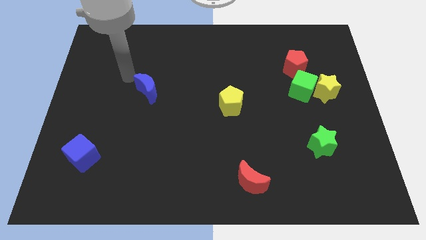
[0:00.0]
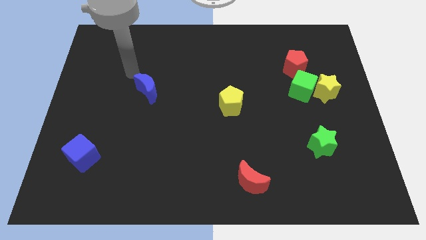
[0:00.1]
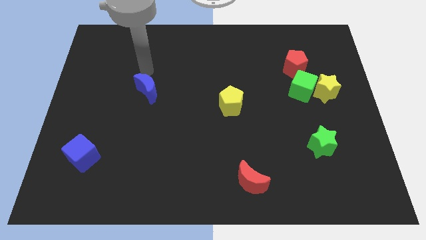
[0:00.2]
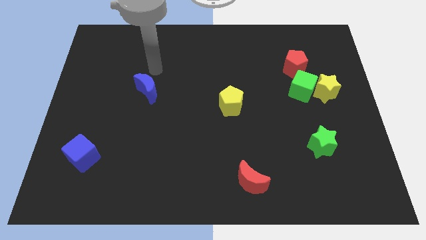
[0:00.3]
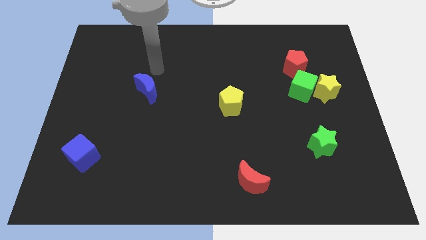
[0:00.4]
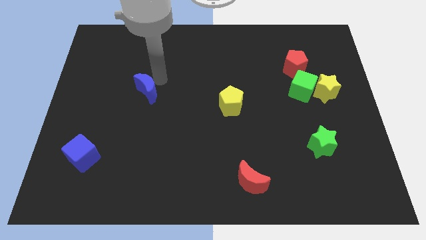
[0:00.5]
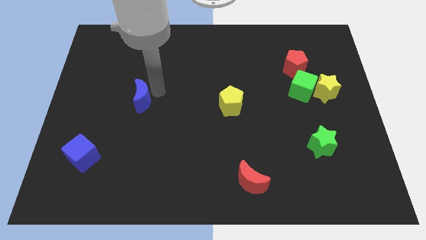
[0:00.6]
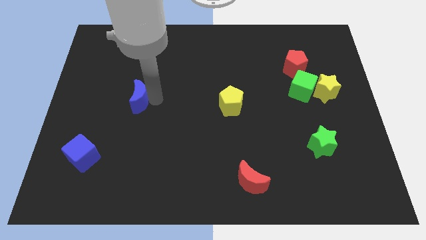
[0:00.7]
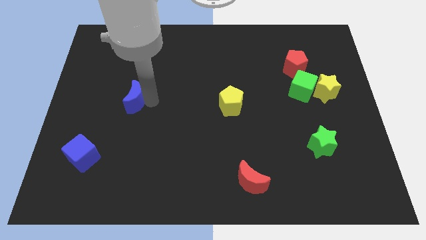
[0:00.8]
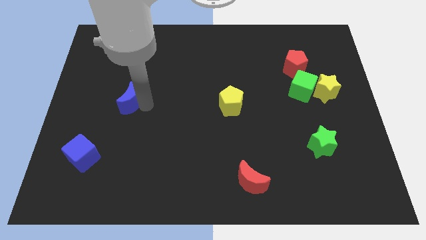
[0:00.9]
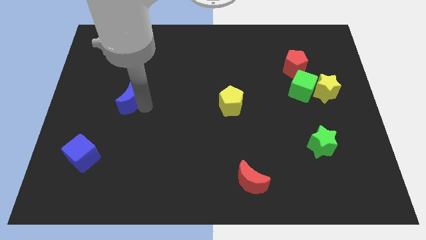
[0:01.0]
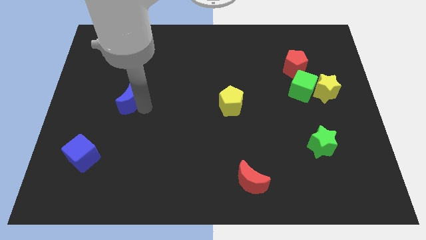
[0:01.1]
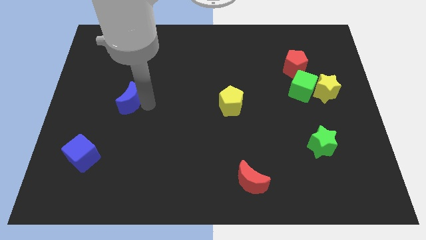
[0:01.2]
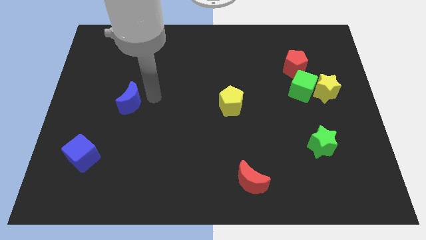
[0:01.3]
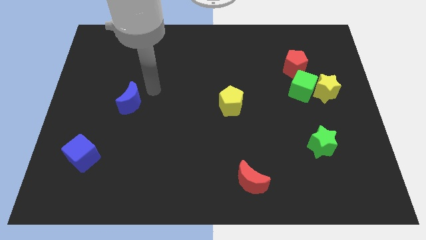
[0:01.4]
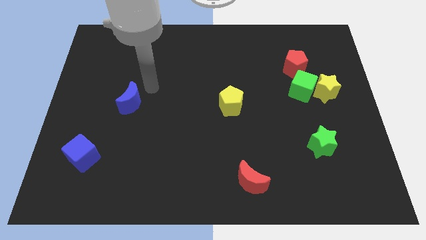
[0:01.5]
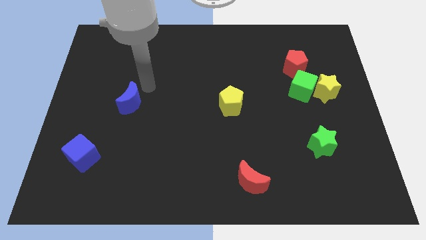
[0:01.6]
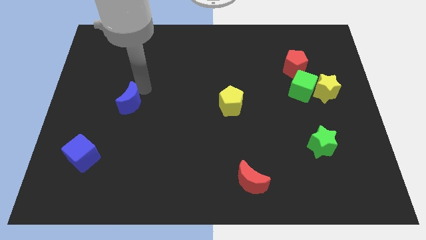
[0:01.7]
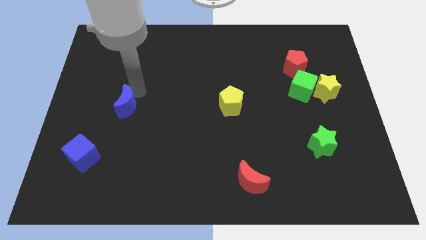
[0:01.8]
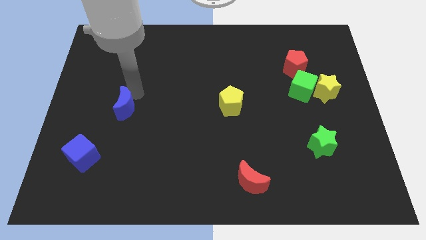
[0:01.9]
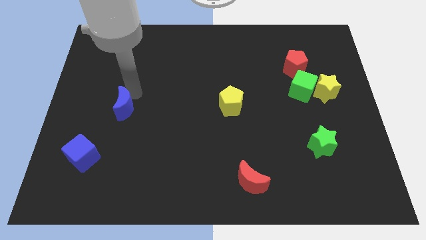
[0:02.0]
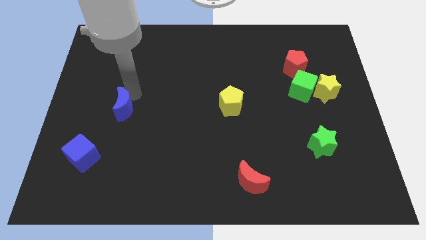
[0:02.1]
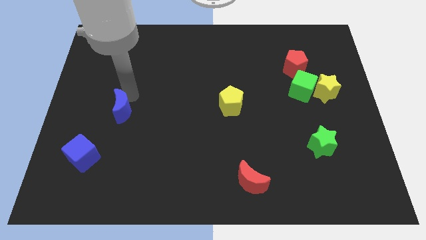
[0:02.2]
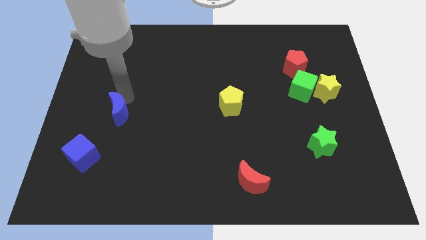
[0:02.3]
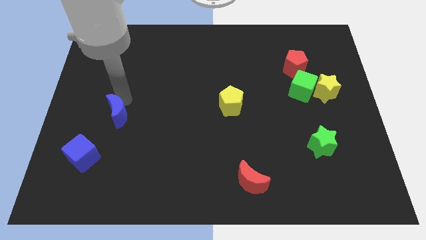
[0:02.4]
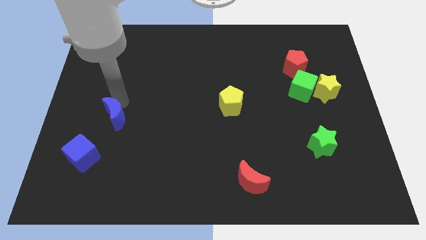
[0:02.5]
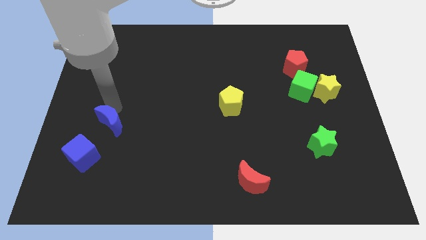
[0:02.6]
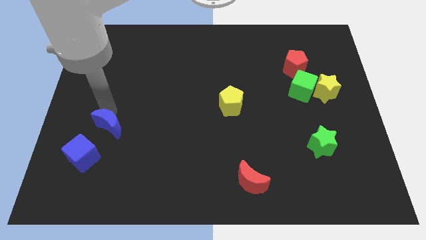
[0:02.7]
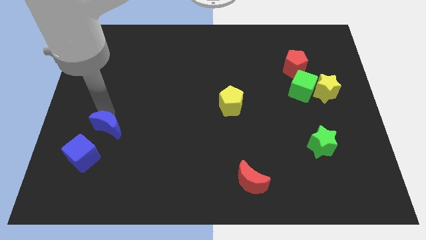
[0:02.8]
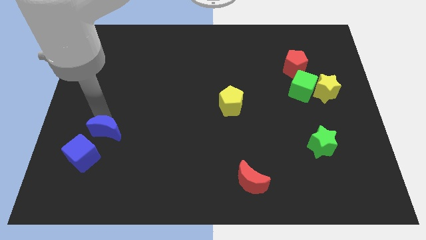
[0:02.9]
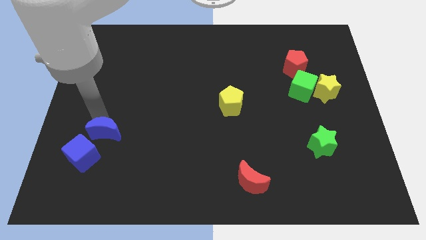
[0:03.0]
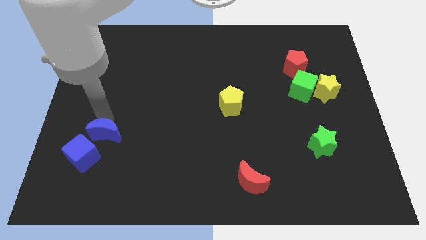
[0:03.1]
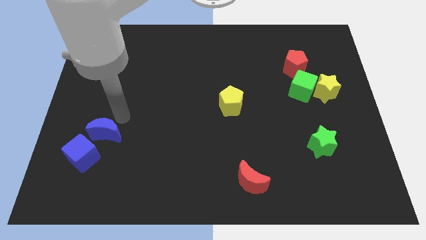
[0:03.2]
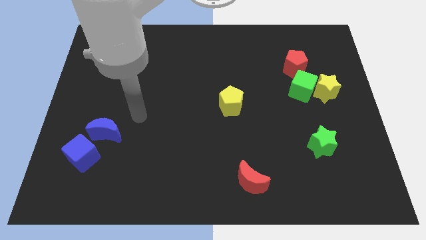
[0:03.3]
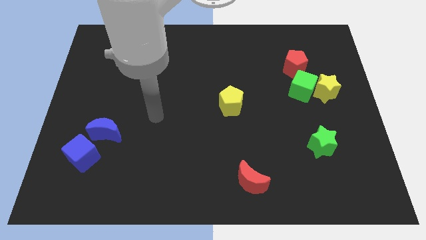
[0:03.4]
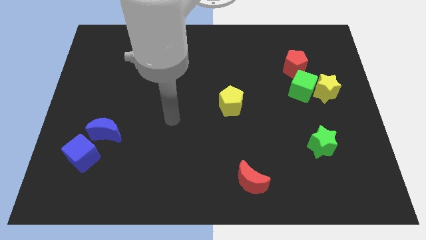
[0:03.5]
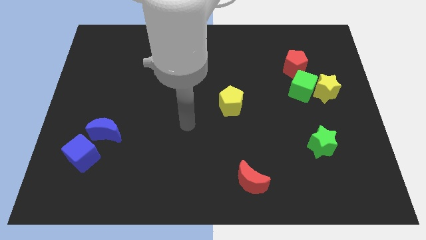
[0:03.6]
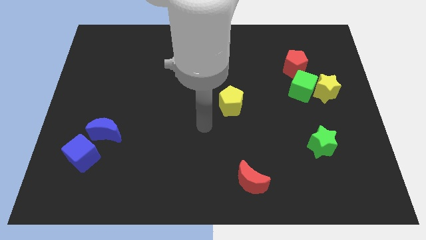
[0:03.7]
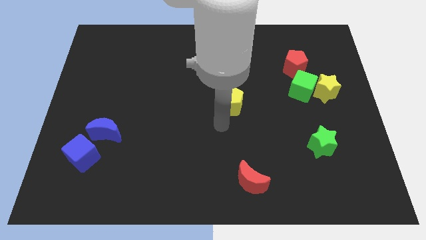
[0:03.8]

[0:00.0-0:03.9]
place the blue moon above the blue cube

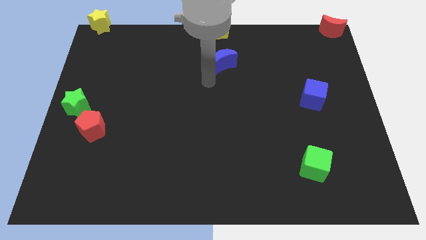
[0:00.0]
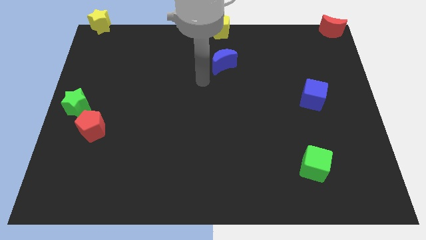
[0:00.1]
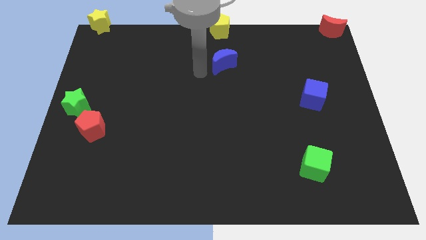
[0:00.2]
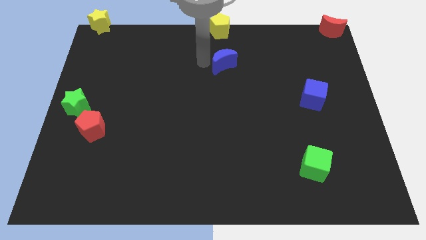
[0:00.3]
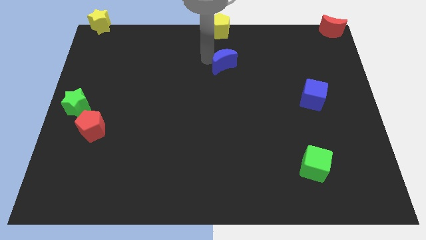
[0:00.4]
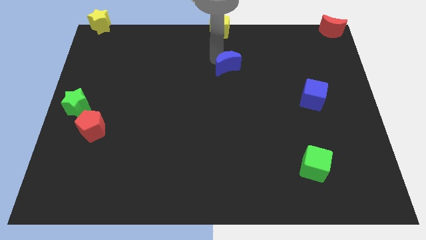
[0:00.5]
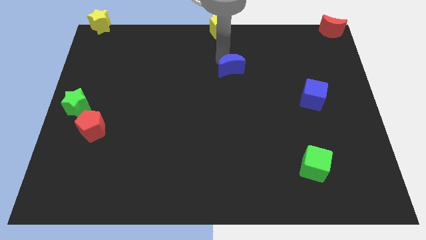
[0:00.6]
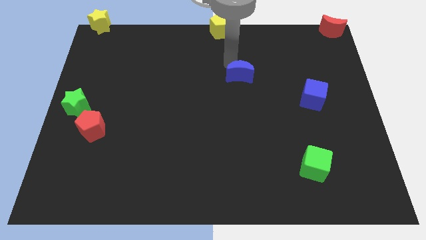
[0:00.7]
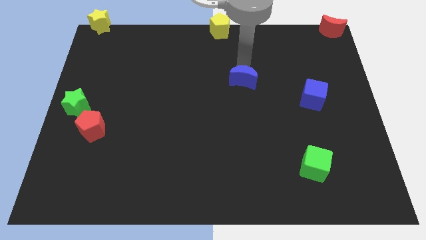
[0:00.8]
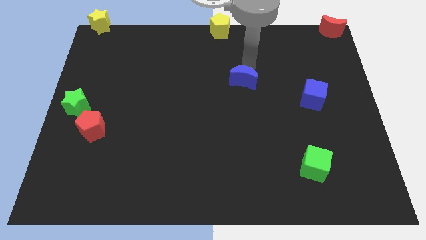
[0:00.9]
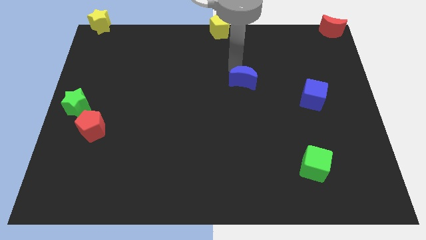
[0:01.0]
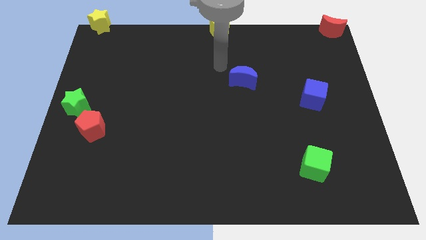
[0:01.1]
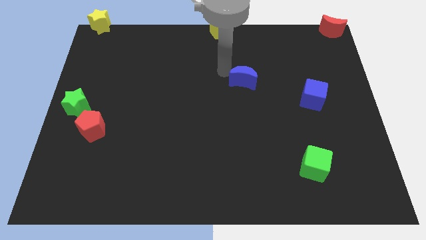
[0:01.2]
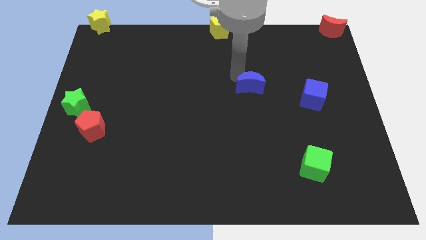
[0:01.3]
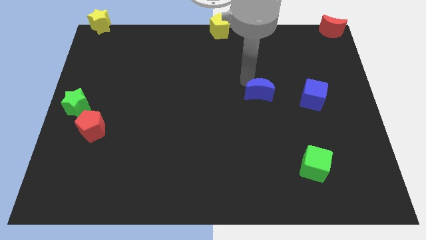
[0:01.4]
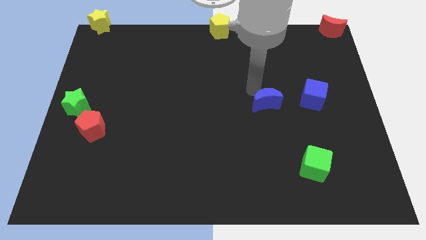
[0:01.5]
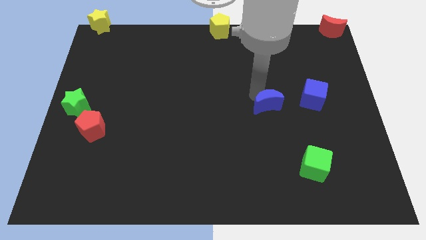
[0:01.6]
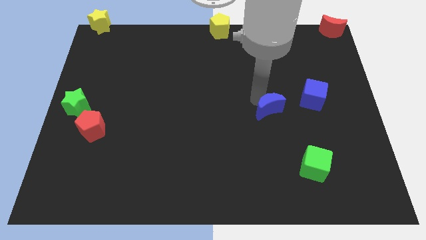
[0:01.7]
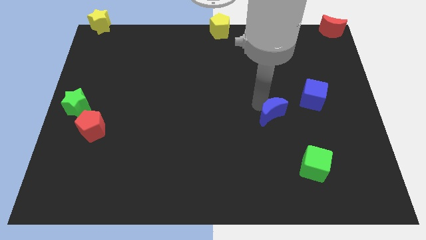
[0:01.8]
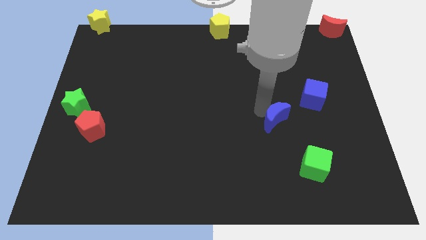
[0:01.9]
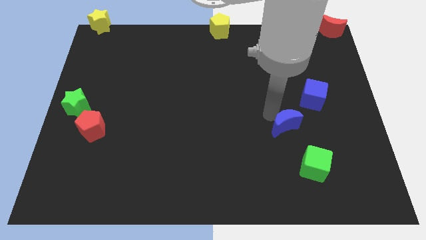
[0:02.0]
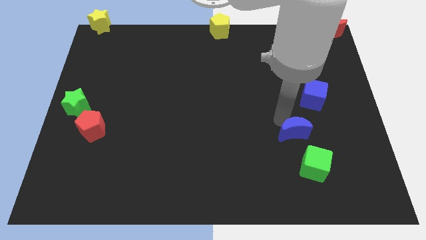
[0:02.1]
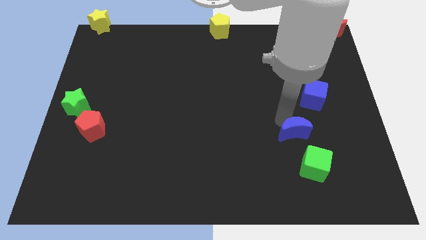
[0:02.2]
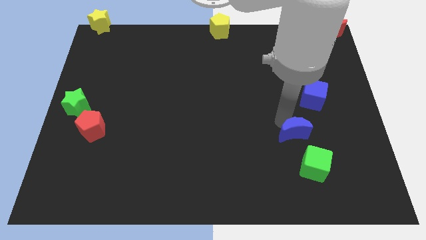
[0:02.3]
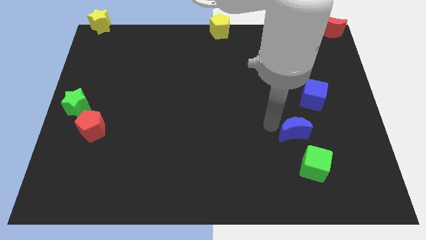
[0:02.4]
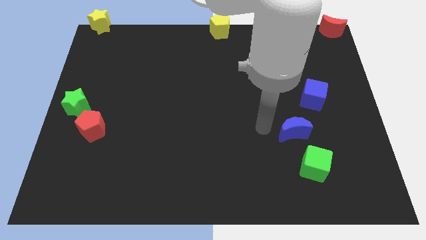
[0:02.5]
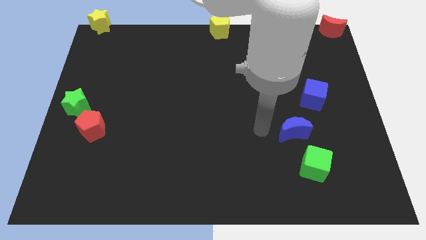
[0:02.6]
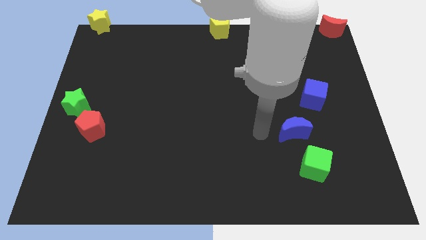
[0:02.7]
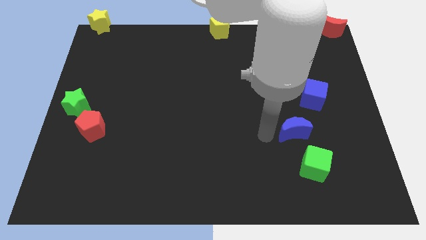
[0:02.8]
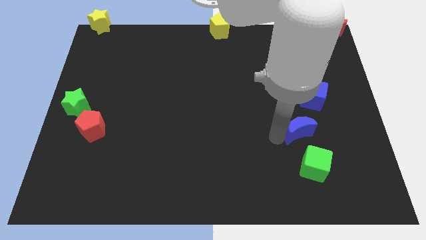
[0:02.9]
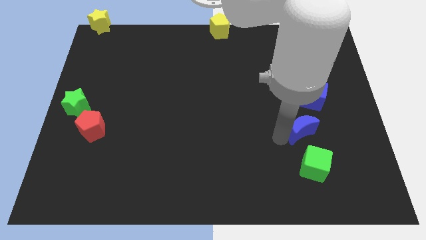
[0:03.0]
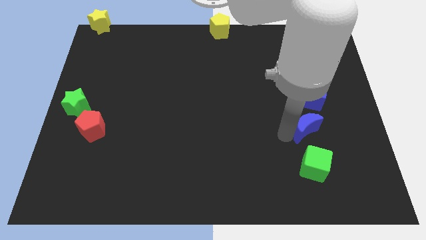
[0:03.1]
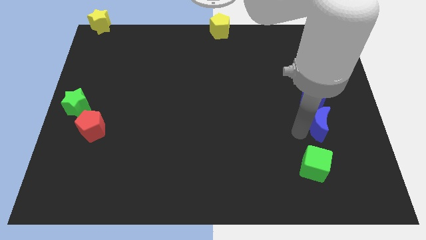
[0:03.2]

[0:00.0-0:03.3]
slide blue moon to the bottom of the blue cube

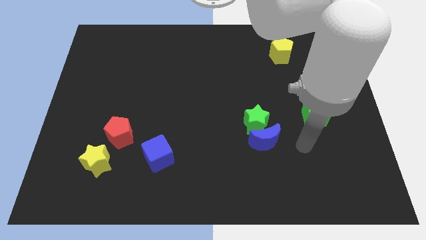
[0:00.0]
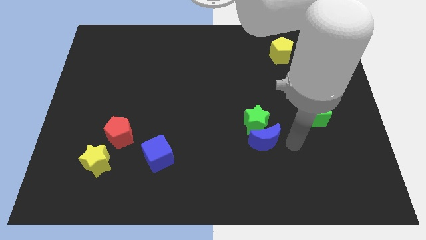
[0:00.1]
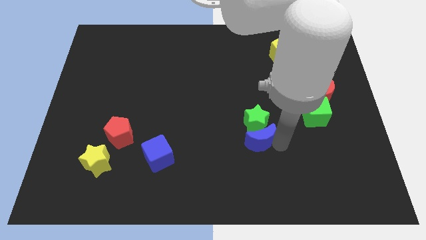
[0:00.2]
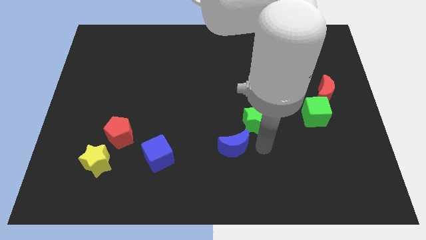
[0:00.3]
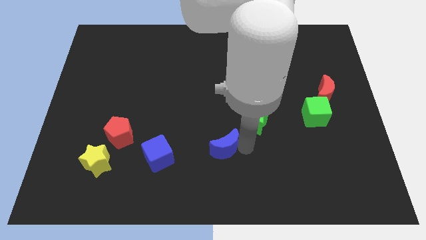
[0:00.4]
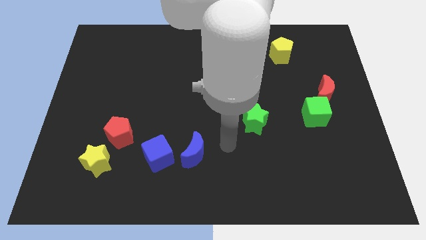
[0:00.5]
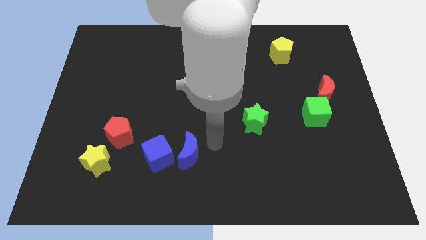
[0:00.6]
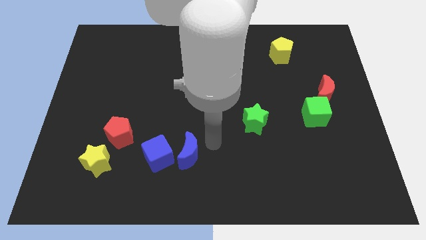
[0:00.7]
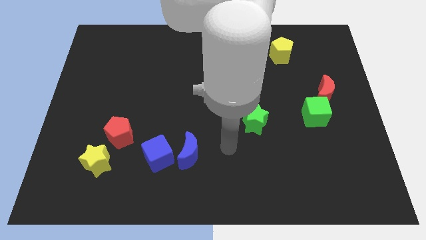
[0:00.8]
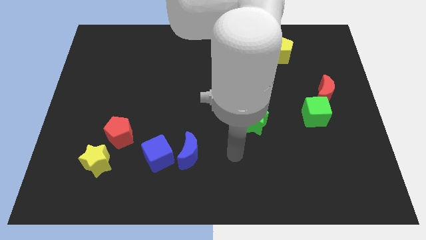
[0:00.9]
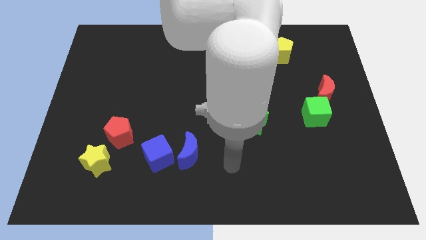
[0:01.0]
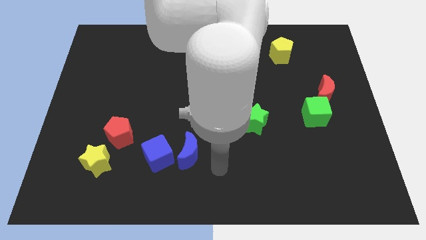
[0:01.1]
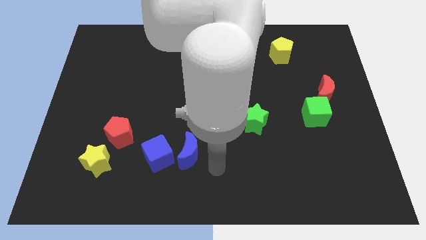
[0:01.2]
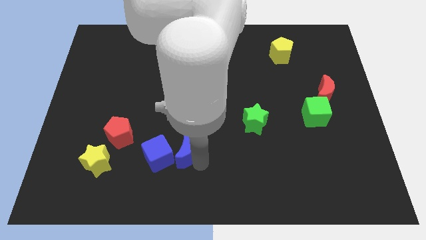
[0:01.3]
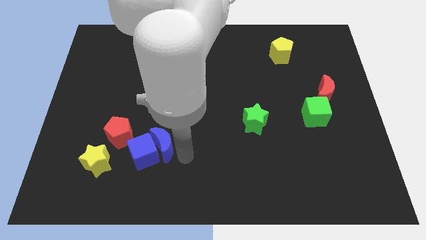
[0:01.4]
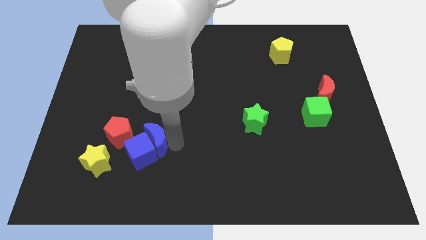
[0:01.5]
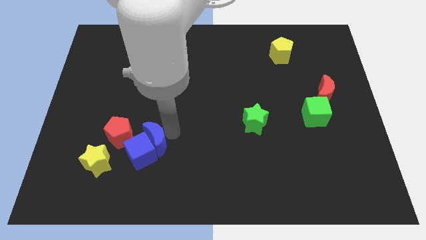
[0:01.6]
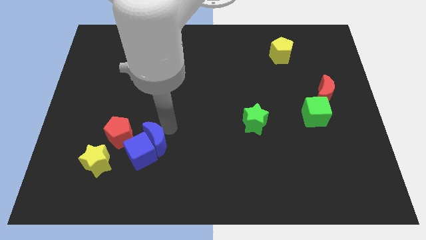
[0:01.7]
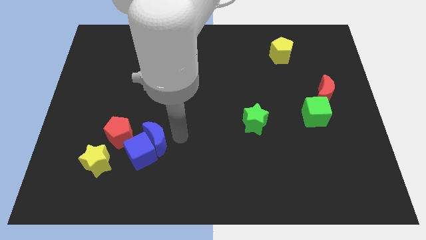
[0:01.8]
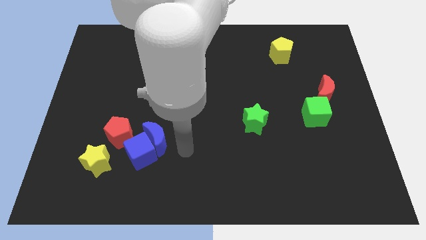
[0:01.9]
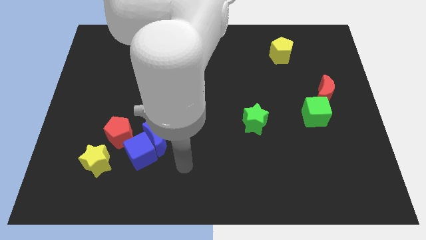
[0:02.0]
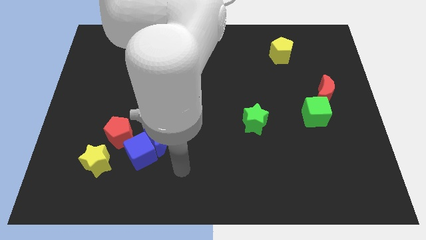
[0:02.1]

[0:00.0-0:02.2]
move blue moon into blue cube
